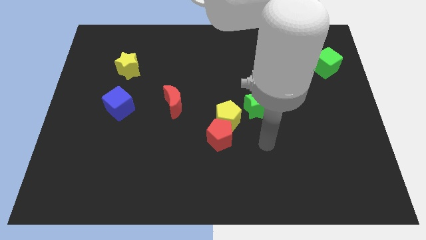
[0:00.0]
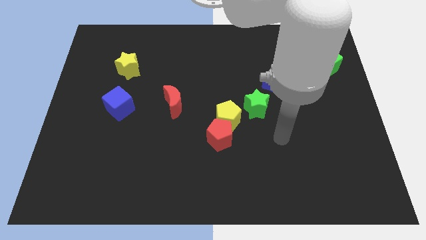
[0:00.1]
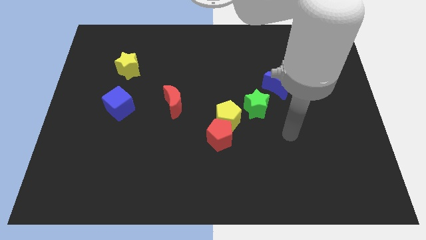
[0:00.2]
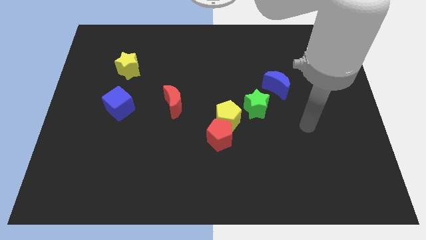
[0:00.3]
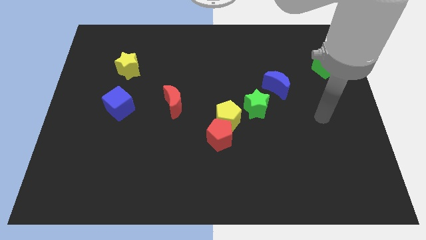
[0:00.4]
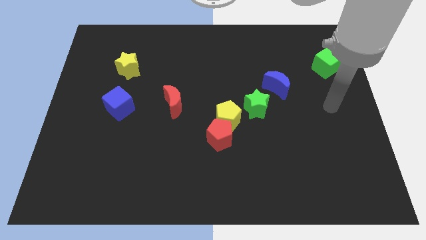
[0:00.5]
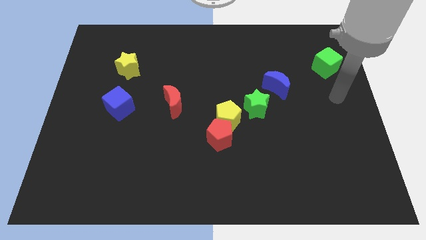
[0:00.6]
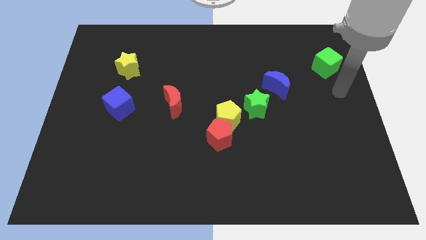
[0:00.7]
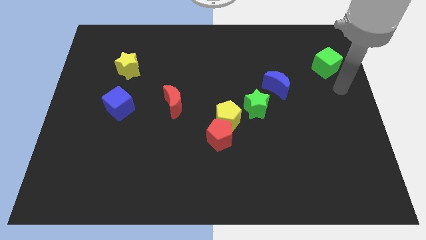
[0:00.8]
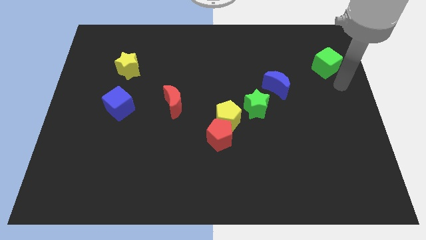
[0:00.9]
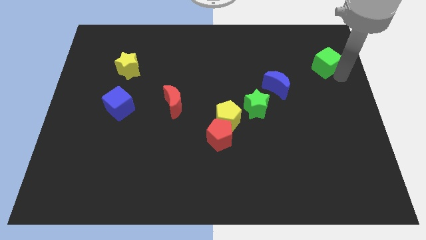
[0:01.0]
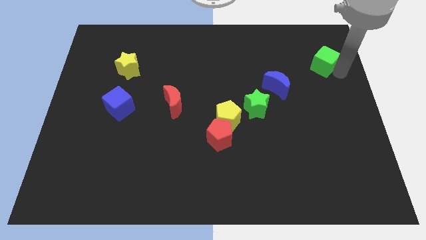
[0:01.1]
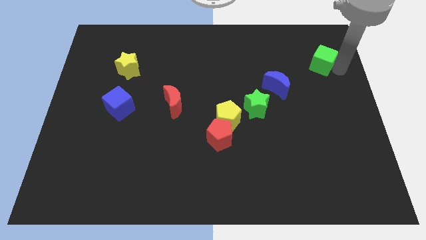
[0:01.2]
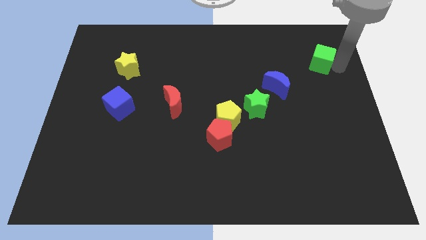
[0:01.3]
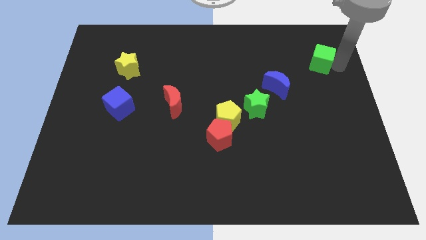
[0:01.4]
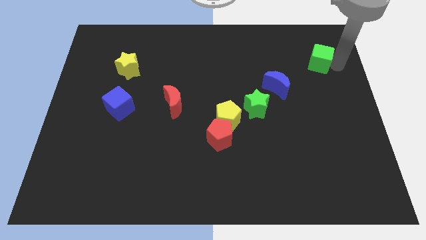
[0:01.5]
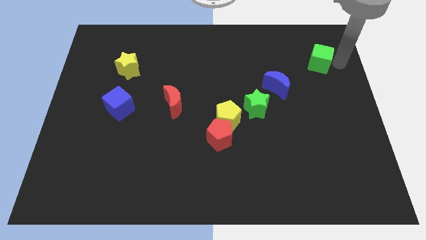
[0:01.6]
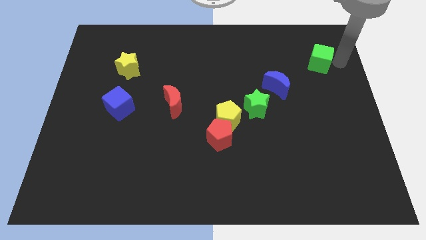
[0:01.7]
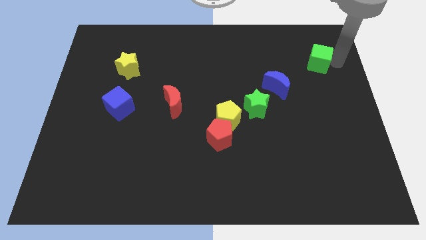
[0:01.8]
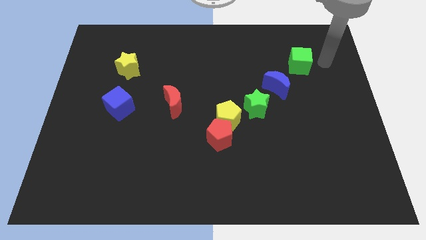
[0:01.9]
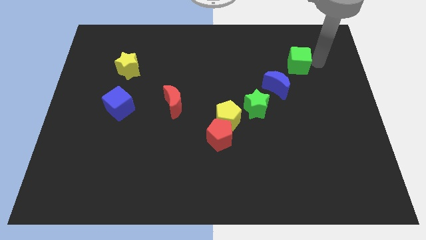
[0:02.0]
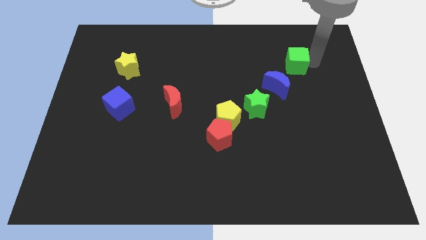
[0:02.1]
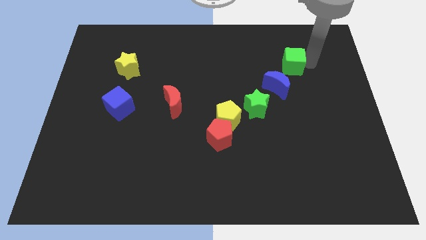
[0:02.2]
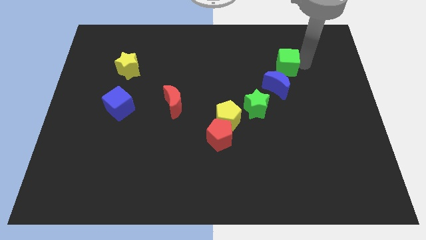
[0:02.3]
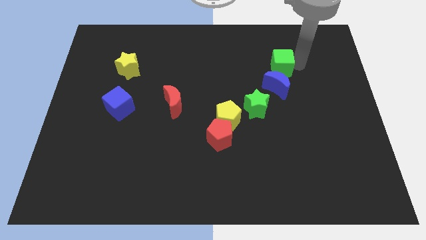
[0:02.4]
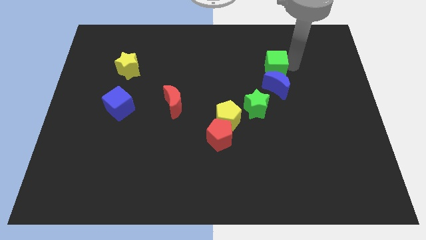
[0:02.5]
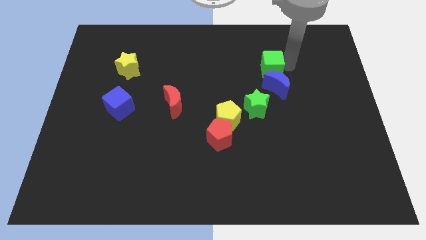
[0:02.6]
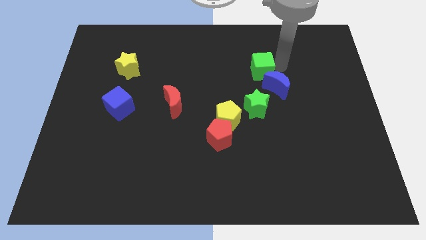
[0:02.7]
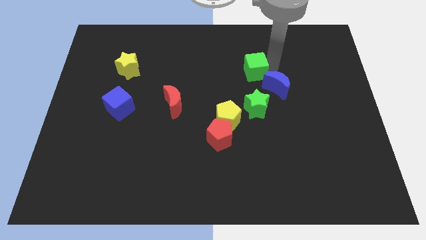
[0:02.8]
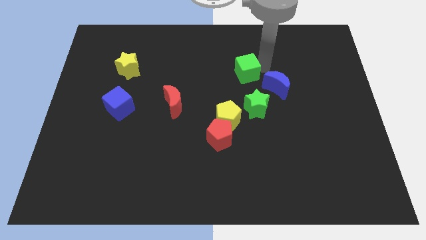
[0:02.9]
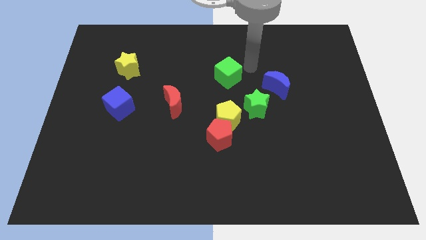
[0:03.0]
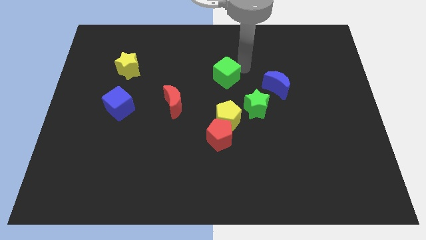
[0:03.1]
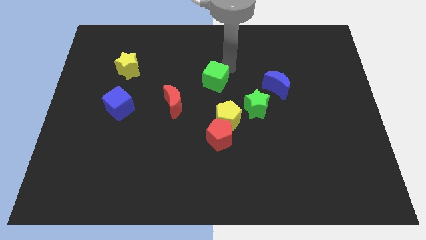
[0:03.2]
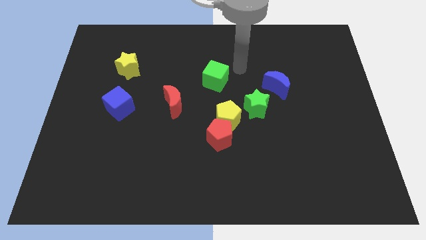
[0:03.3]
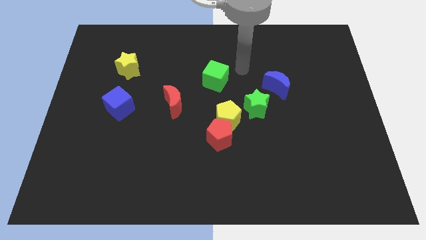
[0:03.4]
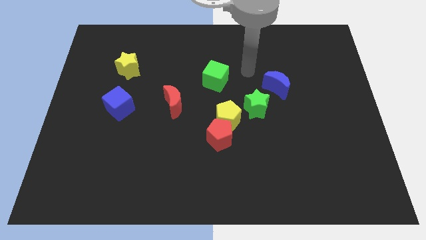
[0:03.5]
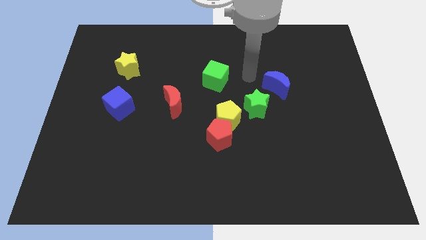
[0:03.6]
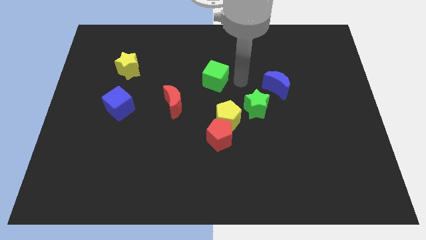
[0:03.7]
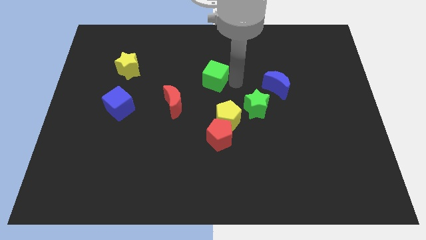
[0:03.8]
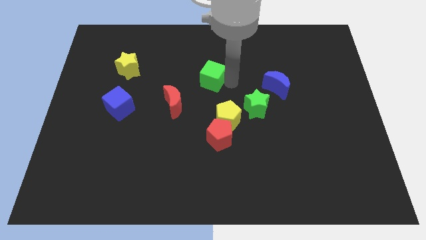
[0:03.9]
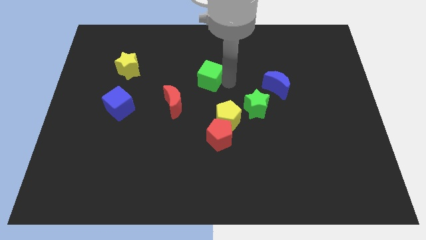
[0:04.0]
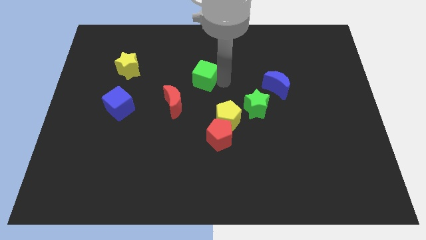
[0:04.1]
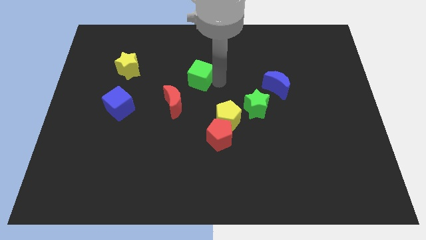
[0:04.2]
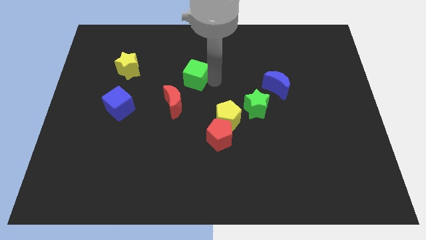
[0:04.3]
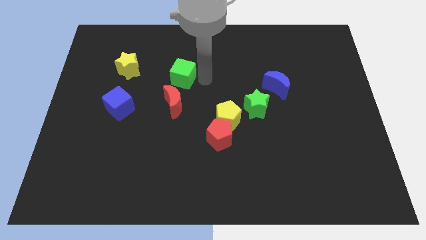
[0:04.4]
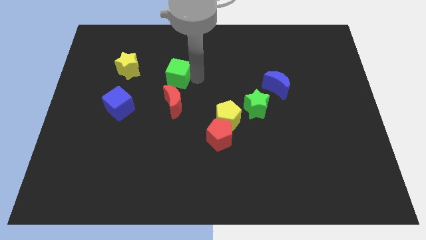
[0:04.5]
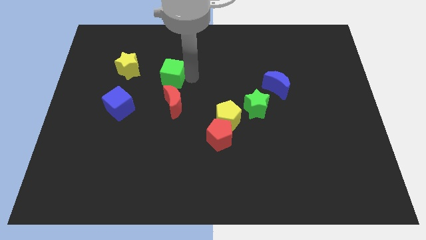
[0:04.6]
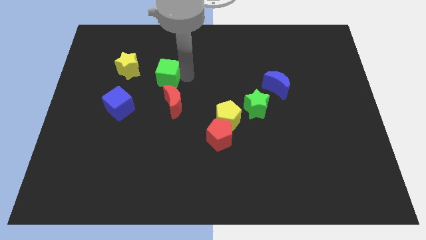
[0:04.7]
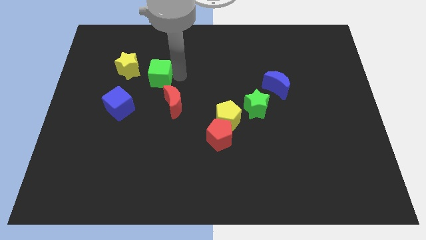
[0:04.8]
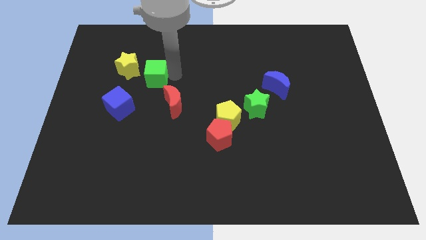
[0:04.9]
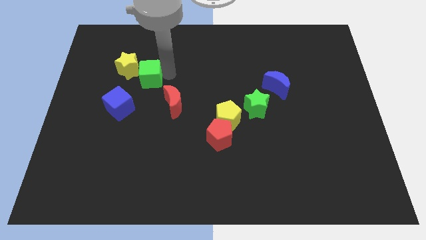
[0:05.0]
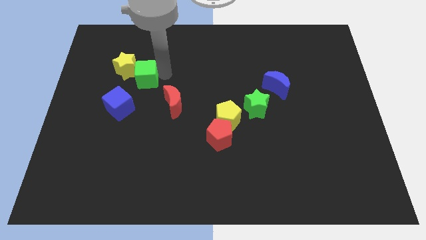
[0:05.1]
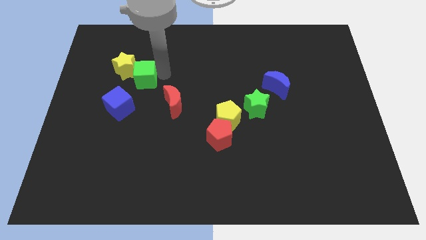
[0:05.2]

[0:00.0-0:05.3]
move the green cube to the yellow star

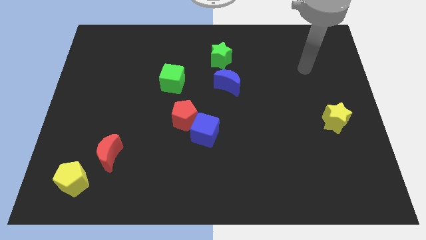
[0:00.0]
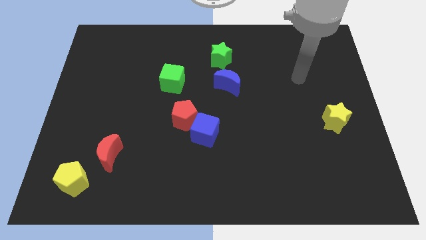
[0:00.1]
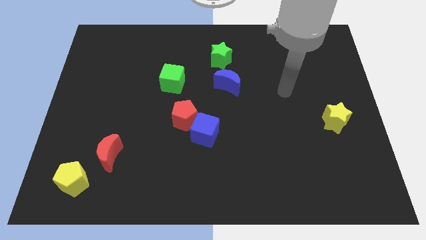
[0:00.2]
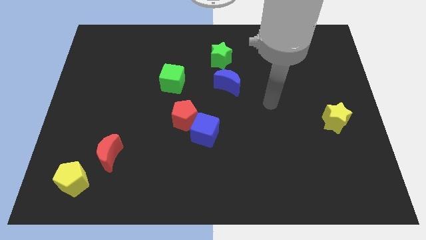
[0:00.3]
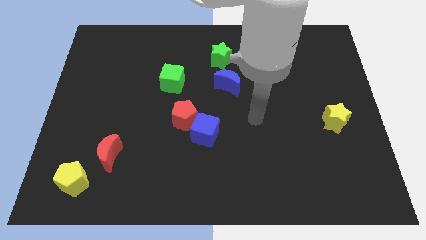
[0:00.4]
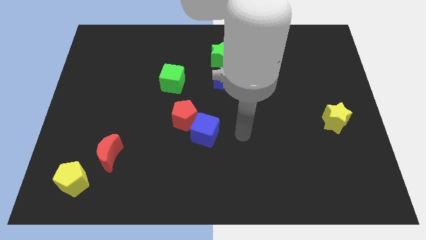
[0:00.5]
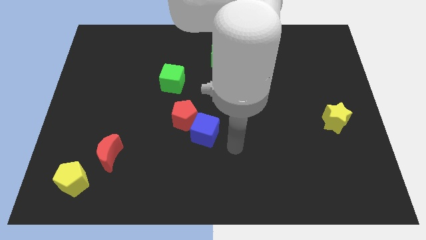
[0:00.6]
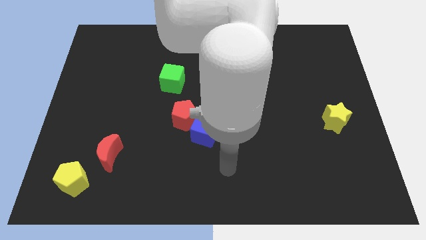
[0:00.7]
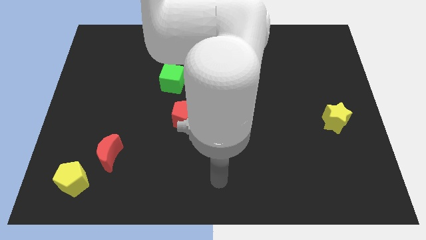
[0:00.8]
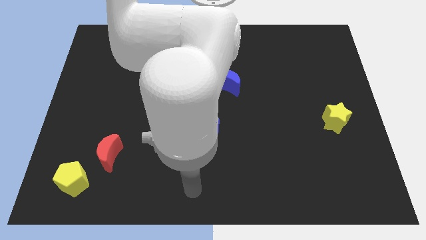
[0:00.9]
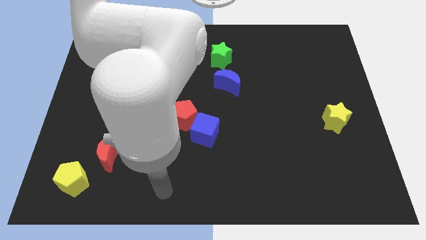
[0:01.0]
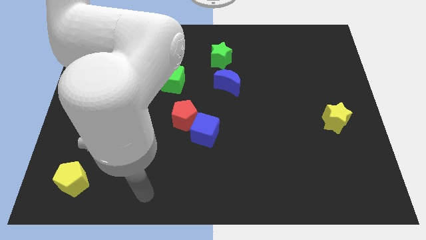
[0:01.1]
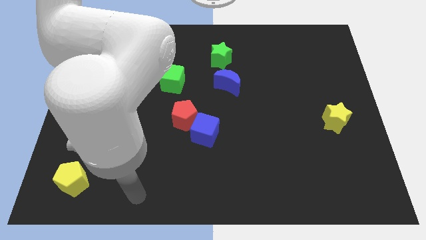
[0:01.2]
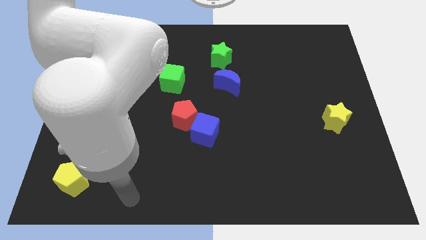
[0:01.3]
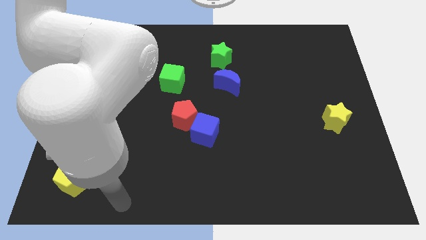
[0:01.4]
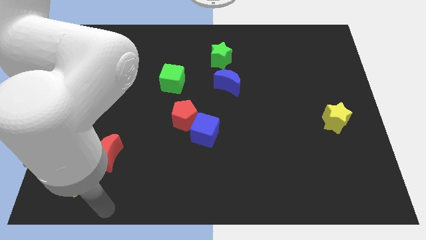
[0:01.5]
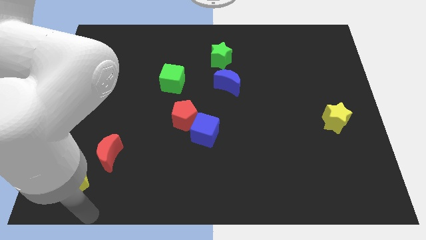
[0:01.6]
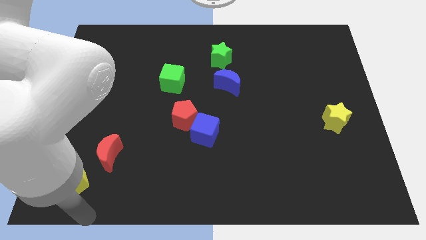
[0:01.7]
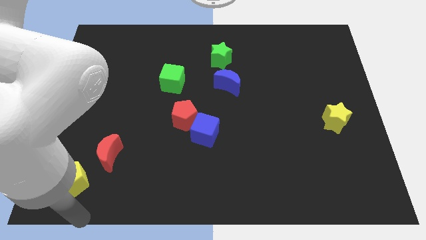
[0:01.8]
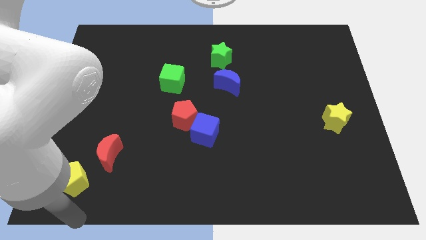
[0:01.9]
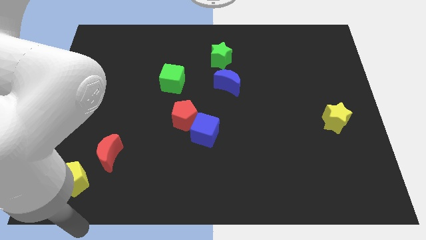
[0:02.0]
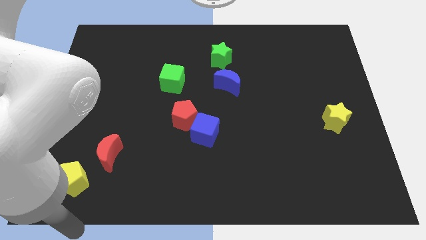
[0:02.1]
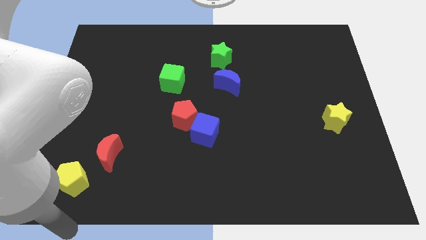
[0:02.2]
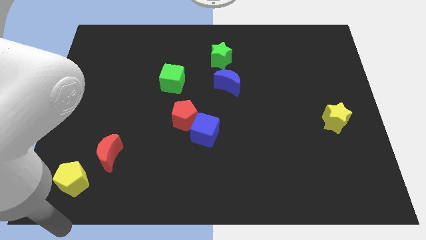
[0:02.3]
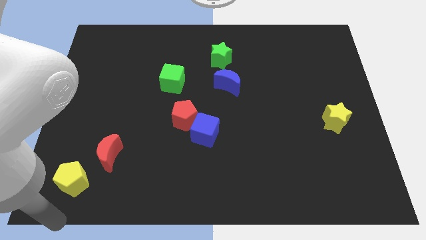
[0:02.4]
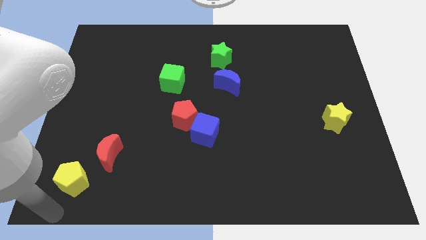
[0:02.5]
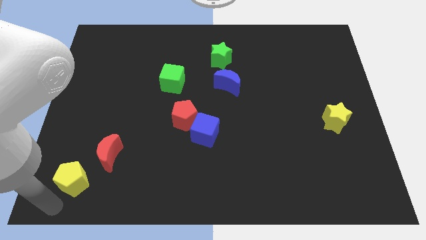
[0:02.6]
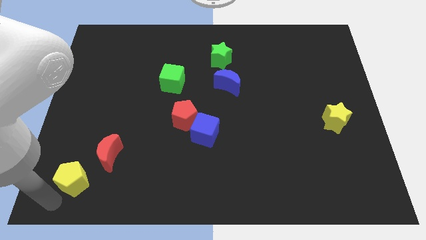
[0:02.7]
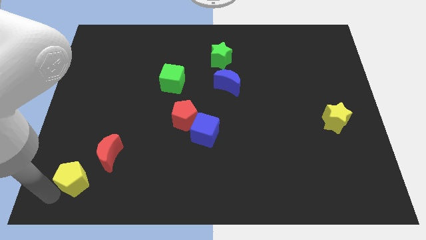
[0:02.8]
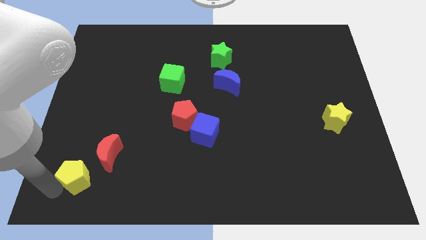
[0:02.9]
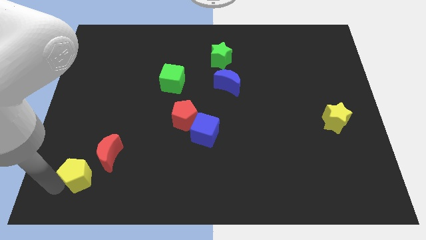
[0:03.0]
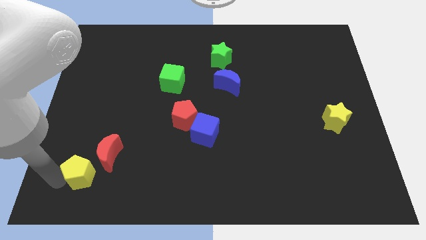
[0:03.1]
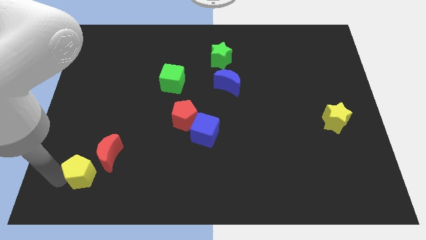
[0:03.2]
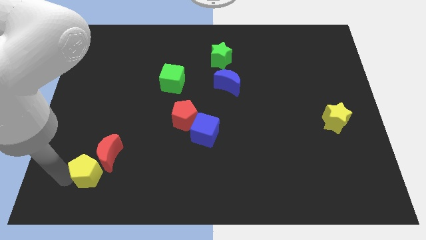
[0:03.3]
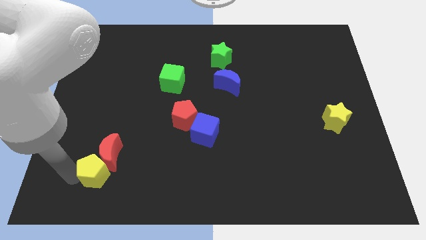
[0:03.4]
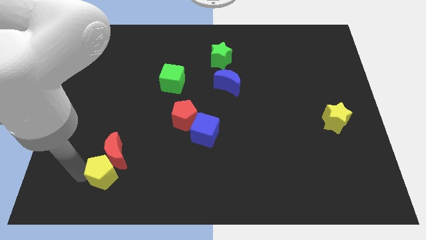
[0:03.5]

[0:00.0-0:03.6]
move the yellow pentagon towards the red moon
